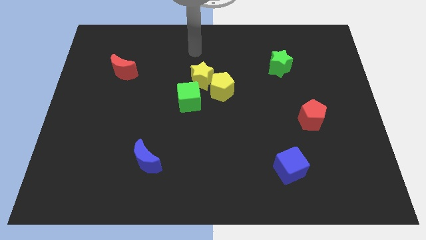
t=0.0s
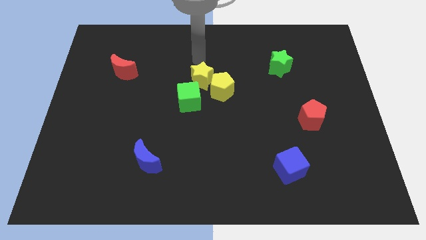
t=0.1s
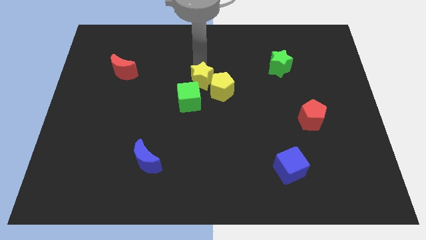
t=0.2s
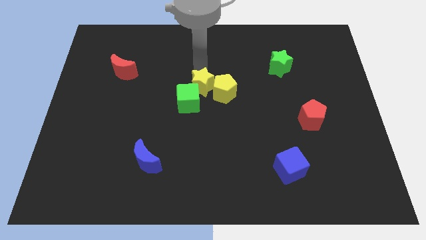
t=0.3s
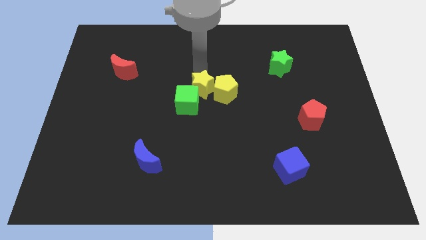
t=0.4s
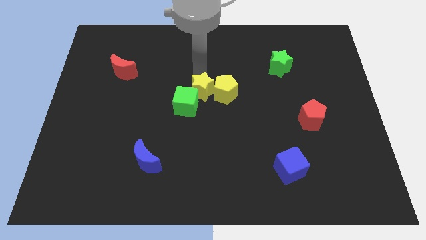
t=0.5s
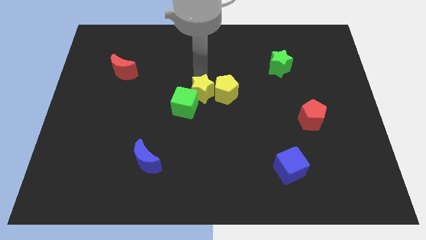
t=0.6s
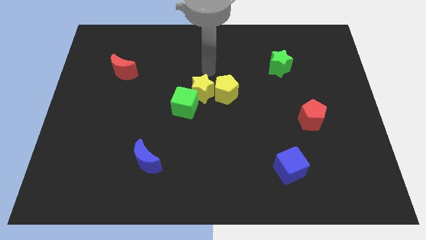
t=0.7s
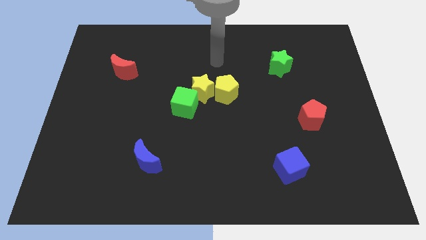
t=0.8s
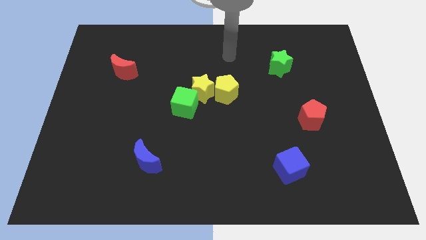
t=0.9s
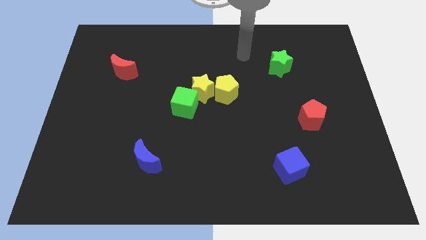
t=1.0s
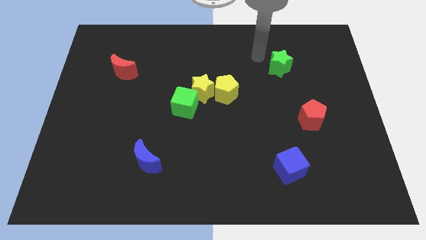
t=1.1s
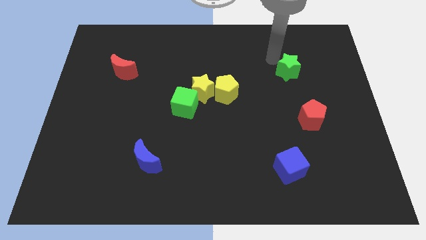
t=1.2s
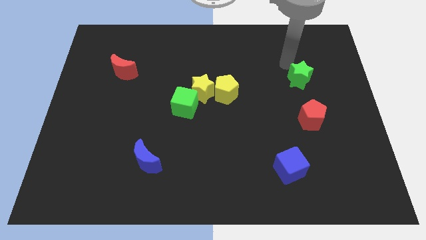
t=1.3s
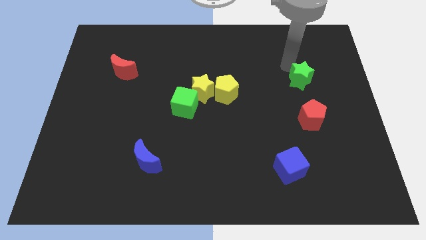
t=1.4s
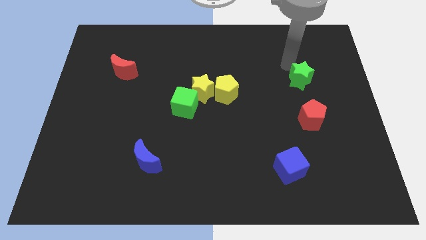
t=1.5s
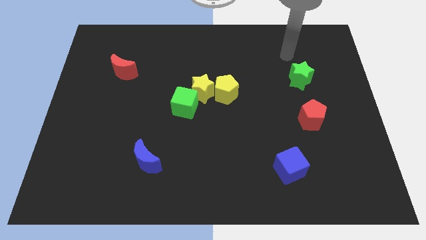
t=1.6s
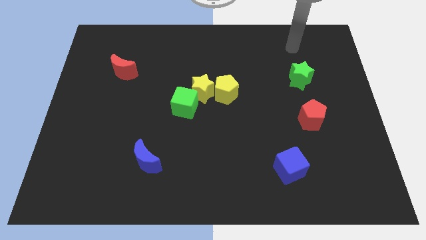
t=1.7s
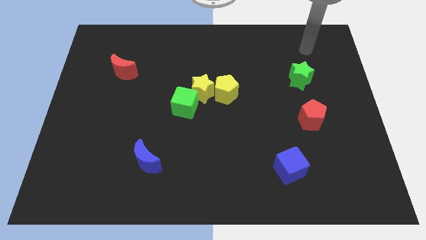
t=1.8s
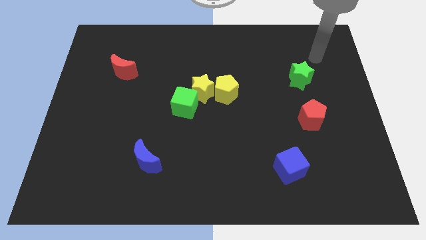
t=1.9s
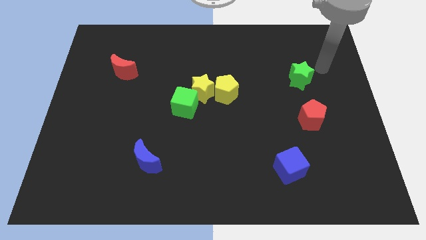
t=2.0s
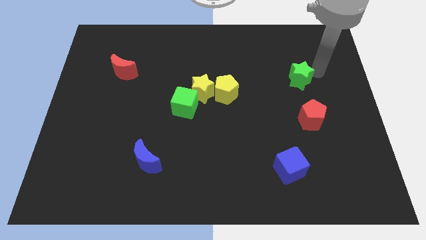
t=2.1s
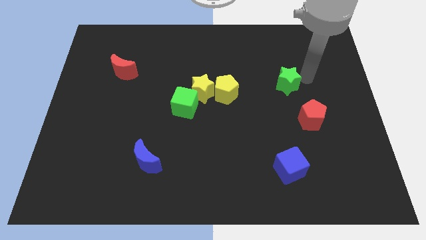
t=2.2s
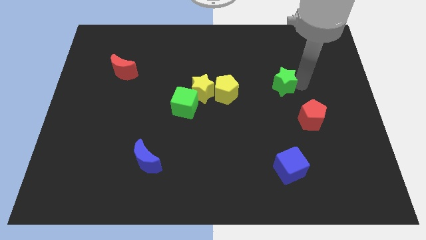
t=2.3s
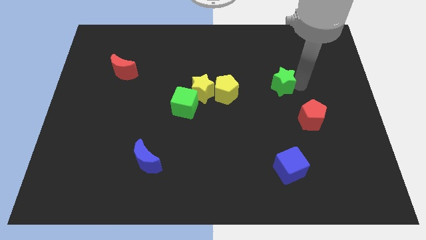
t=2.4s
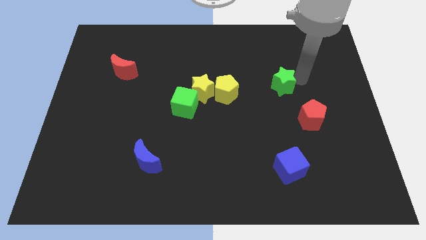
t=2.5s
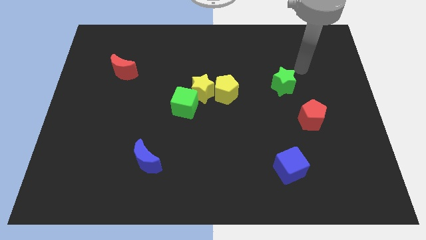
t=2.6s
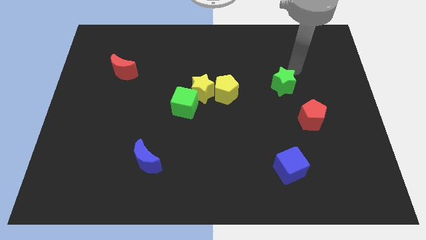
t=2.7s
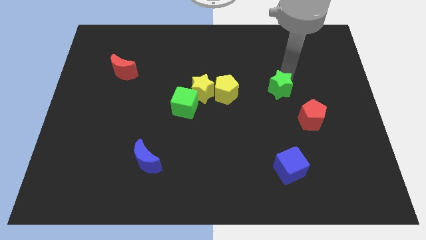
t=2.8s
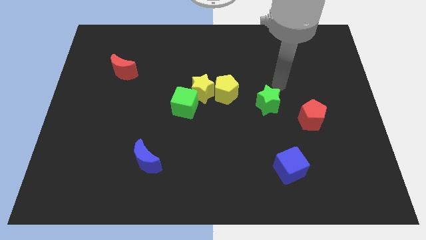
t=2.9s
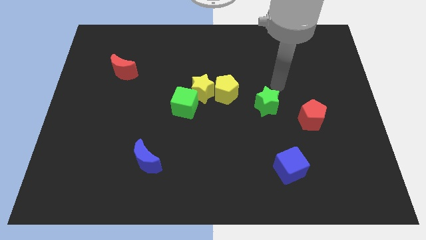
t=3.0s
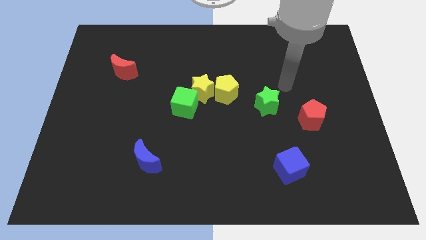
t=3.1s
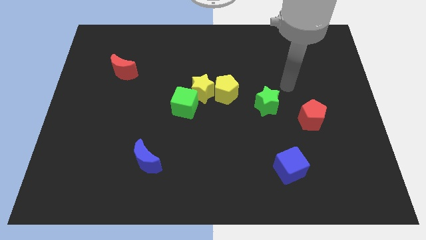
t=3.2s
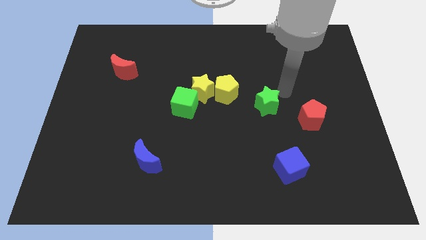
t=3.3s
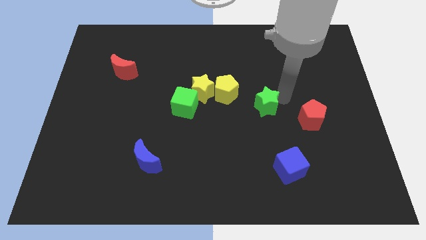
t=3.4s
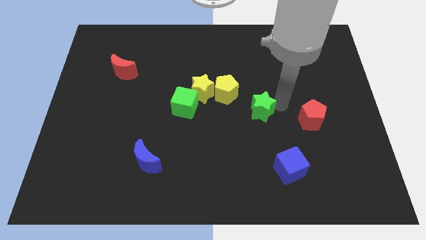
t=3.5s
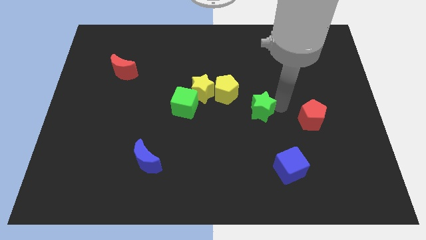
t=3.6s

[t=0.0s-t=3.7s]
push the green star to the left of the red pentagon

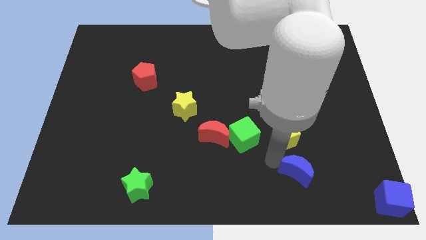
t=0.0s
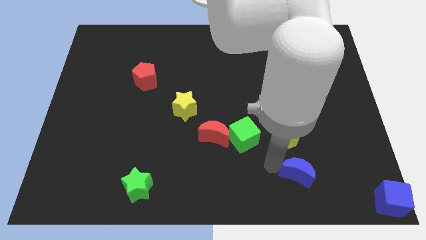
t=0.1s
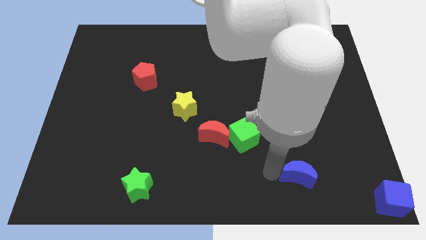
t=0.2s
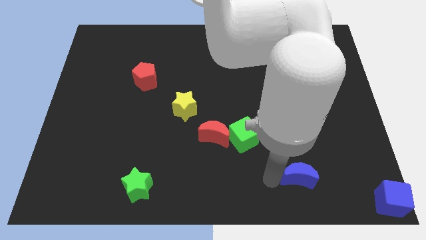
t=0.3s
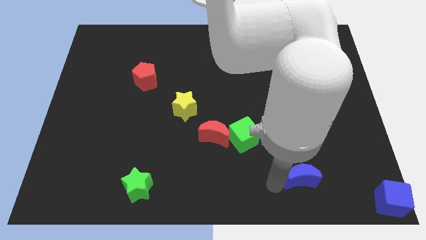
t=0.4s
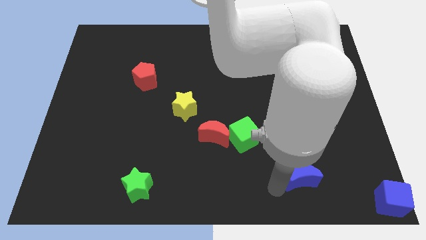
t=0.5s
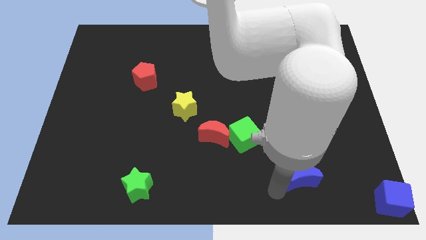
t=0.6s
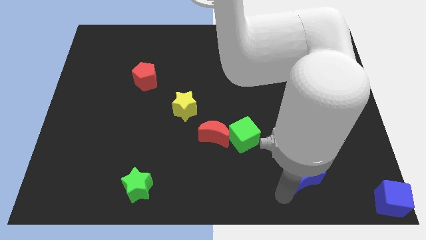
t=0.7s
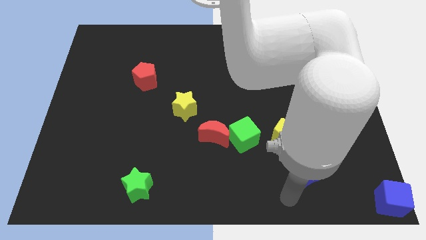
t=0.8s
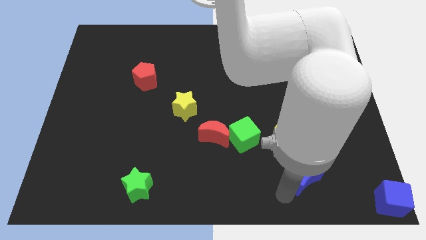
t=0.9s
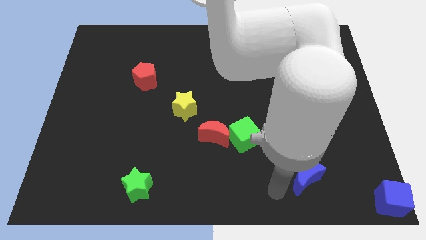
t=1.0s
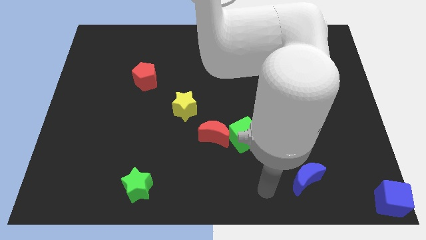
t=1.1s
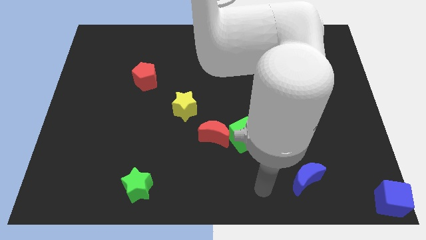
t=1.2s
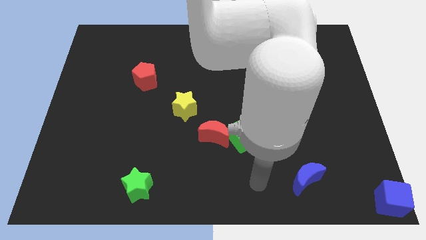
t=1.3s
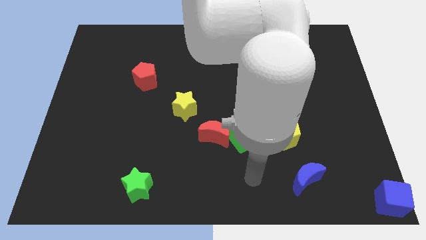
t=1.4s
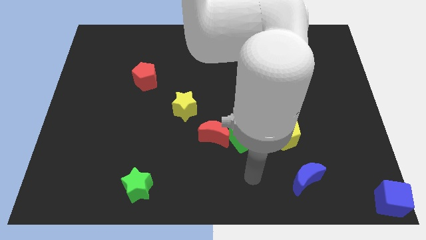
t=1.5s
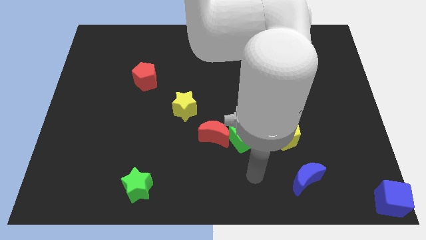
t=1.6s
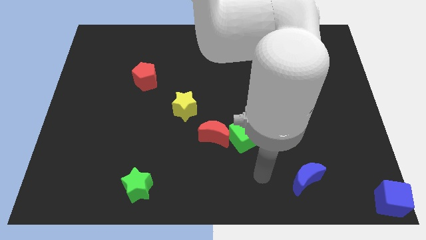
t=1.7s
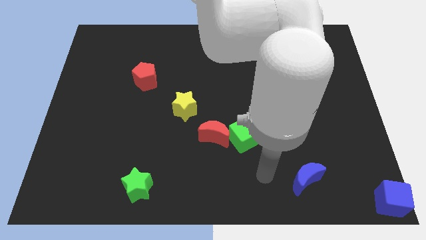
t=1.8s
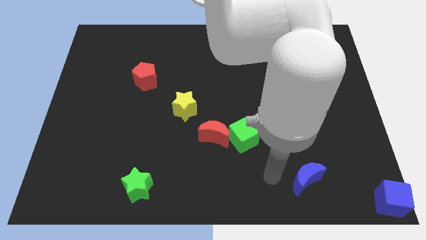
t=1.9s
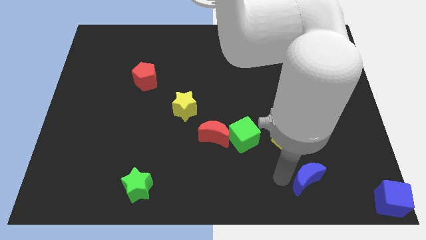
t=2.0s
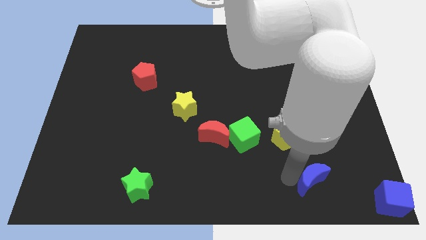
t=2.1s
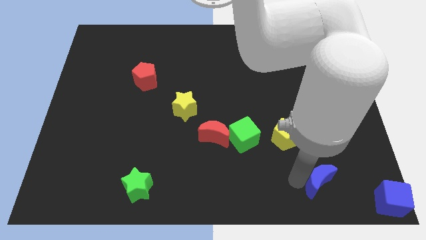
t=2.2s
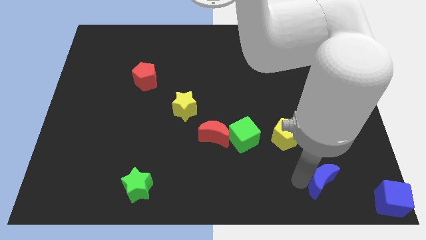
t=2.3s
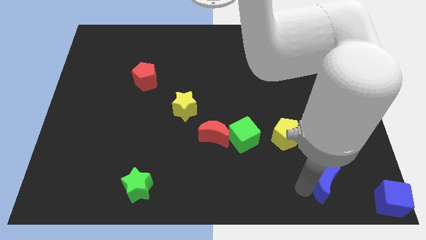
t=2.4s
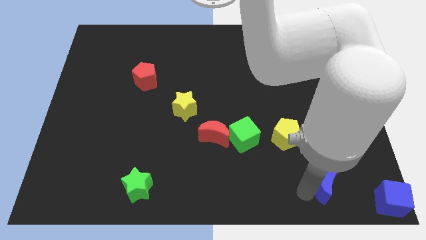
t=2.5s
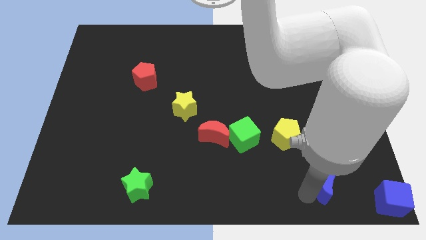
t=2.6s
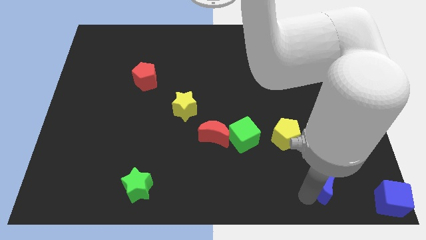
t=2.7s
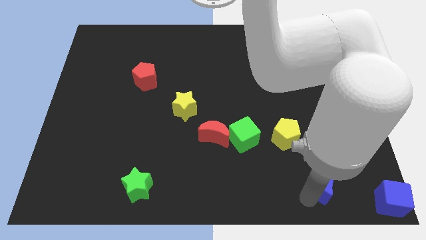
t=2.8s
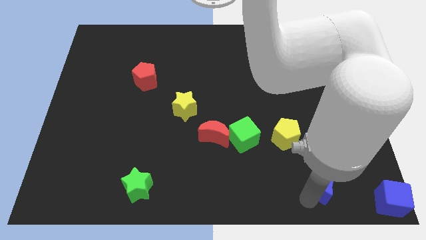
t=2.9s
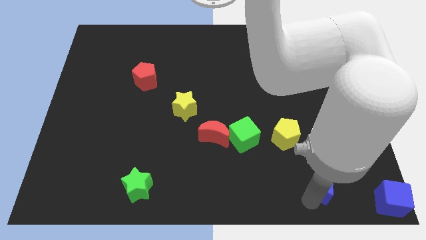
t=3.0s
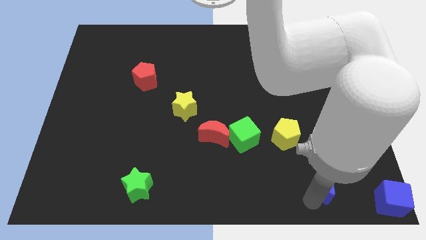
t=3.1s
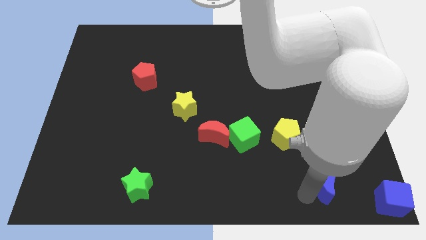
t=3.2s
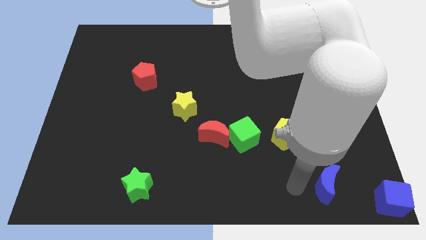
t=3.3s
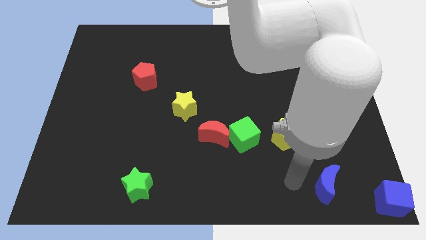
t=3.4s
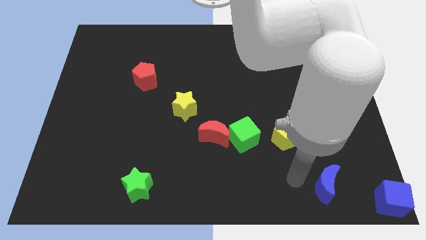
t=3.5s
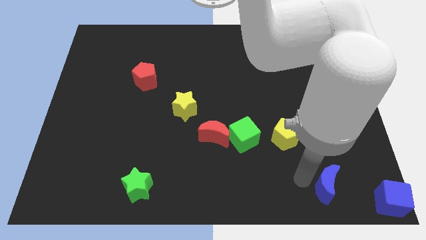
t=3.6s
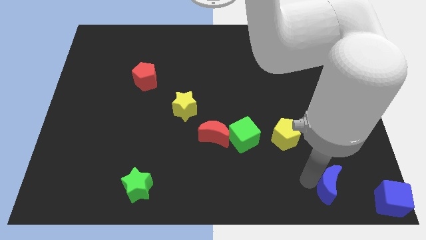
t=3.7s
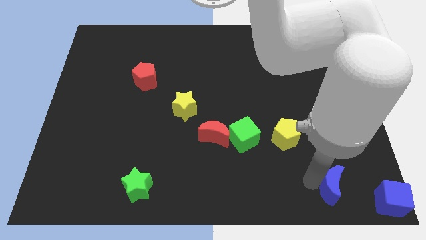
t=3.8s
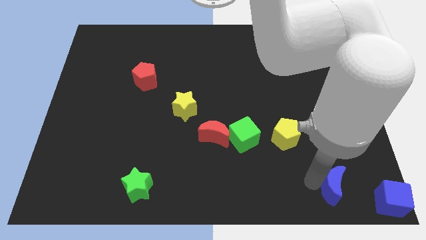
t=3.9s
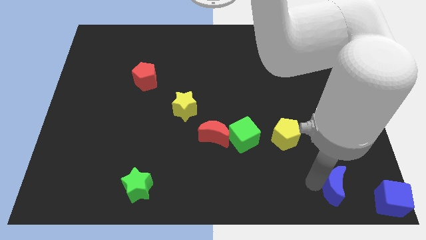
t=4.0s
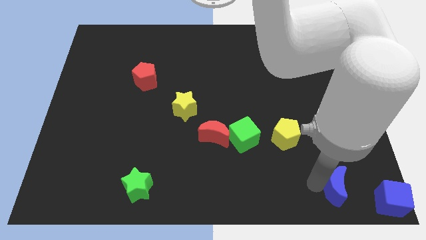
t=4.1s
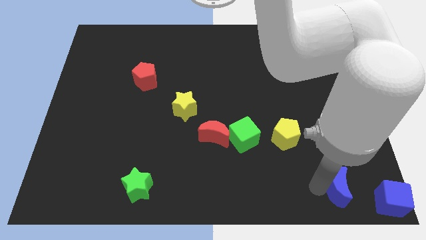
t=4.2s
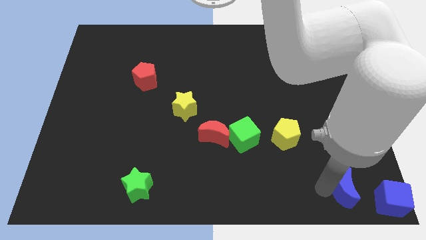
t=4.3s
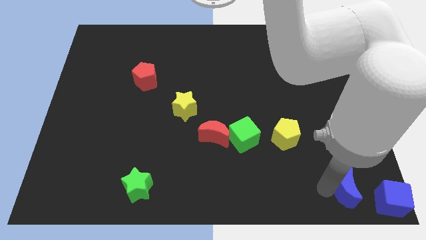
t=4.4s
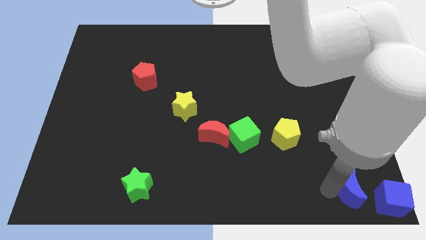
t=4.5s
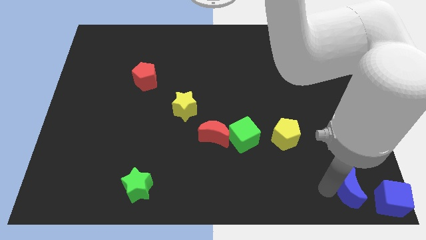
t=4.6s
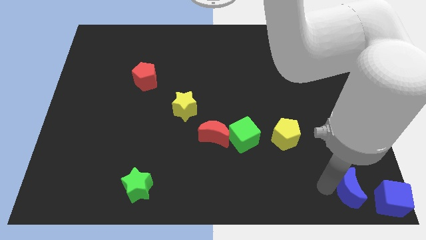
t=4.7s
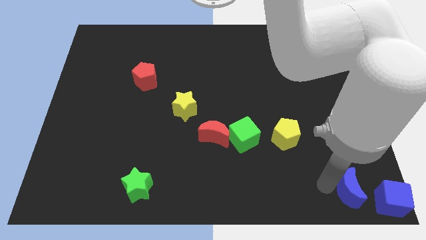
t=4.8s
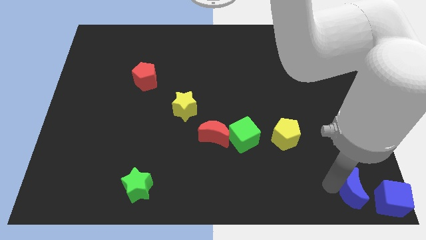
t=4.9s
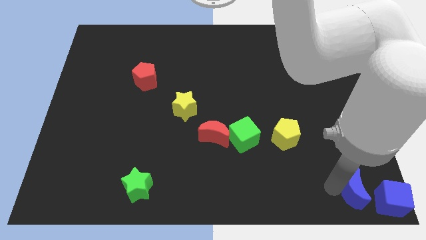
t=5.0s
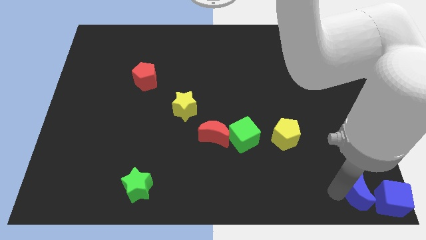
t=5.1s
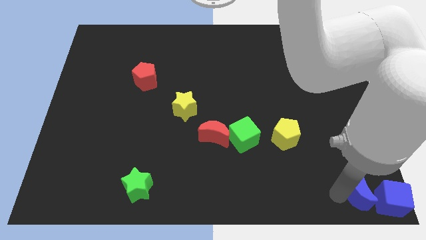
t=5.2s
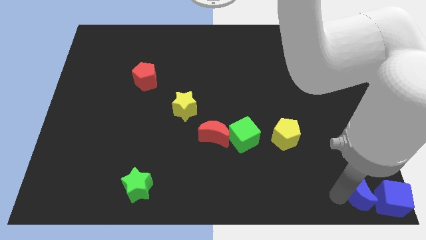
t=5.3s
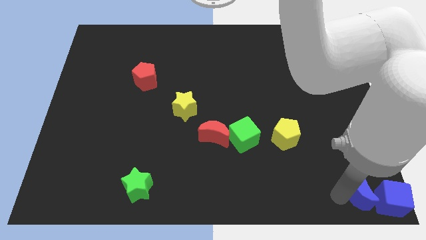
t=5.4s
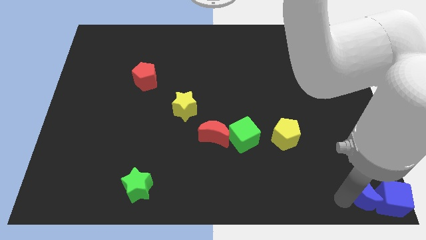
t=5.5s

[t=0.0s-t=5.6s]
move the blue crescent to the left of the blue cube
